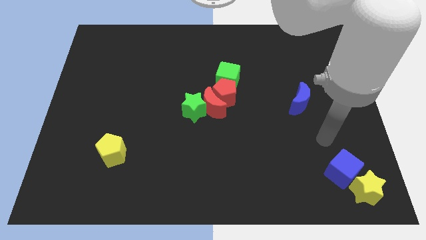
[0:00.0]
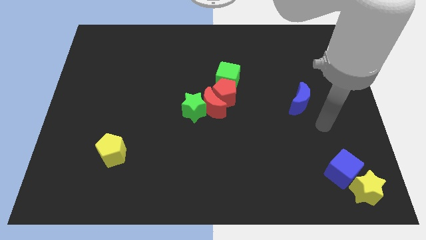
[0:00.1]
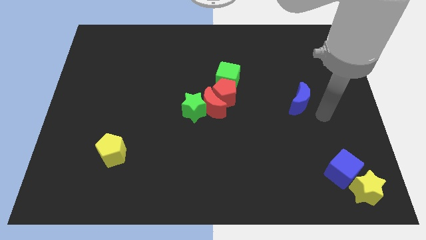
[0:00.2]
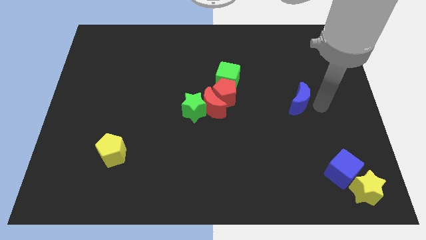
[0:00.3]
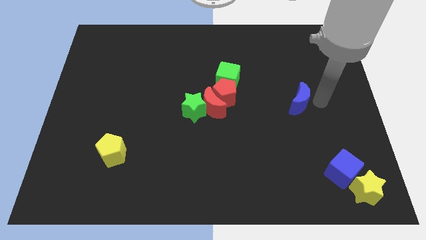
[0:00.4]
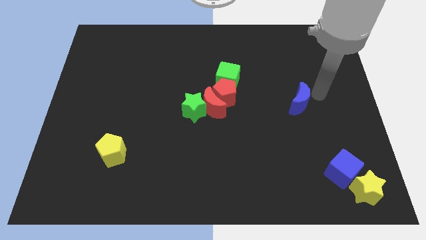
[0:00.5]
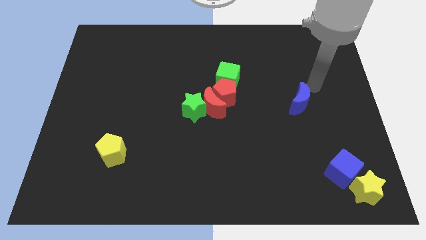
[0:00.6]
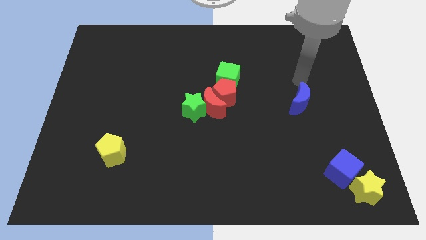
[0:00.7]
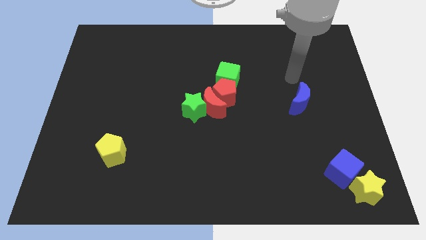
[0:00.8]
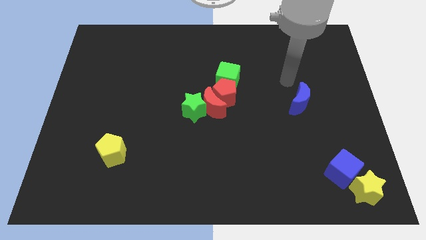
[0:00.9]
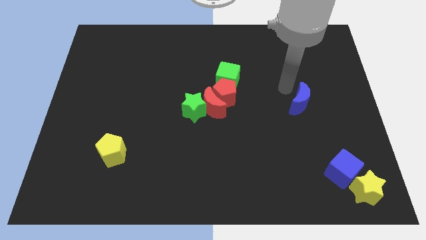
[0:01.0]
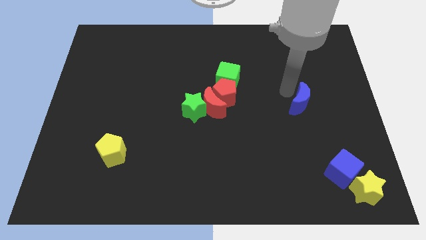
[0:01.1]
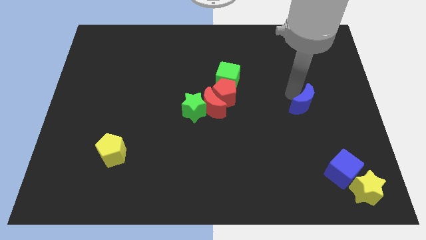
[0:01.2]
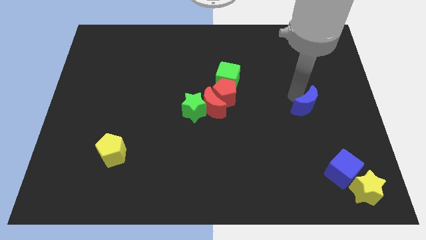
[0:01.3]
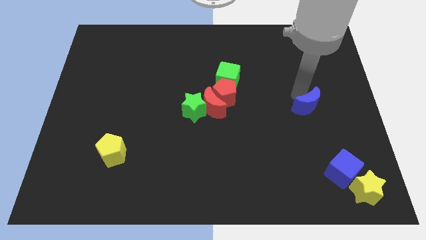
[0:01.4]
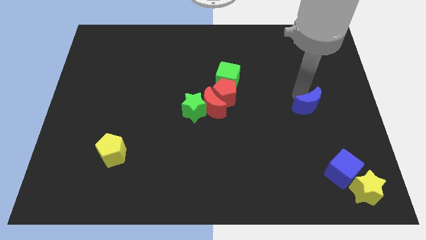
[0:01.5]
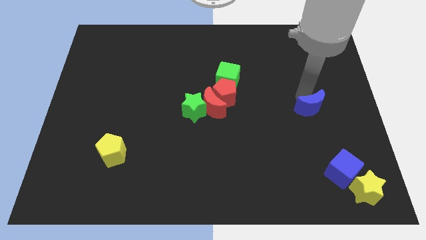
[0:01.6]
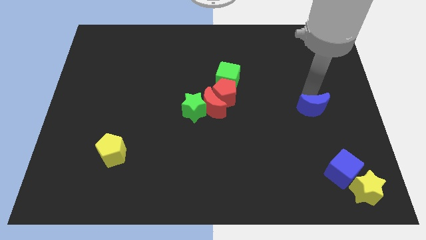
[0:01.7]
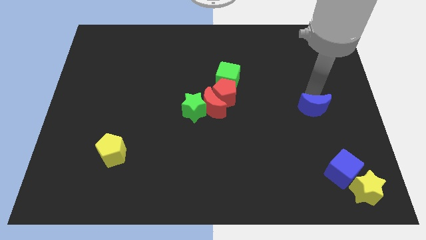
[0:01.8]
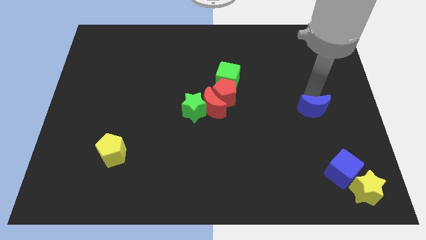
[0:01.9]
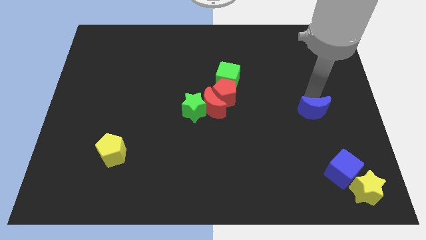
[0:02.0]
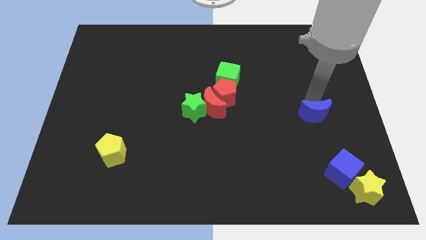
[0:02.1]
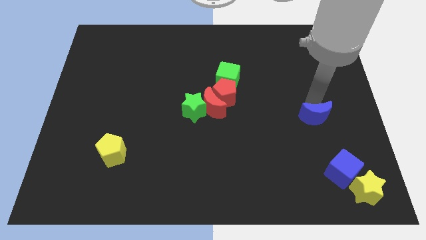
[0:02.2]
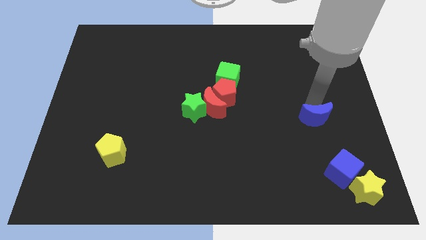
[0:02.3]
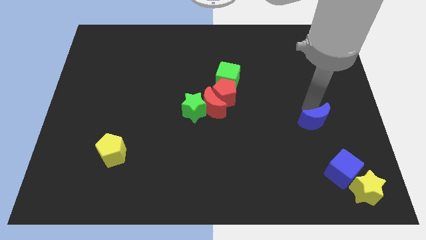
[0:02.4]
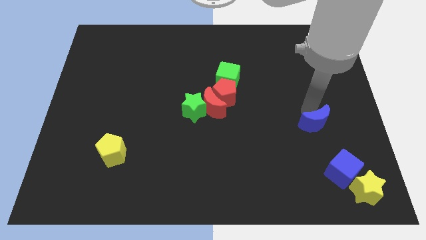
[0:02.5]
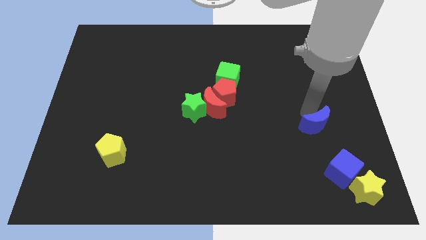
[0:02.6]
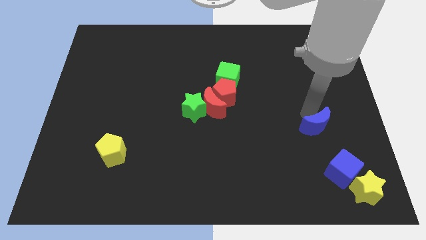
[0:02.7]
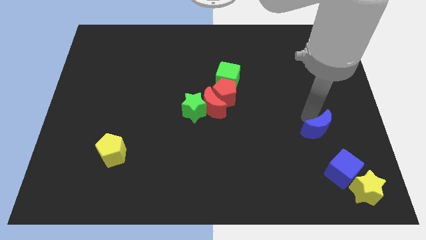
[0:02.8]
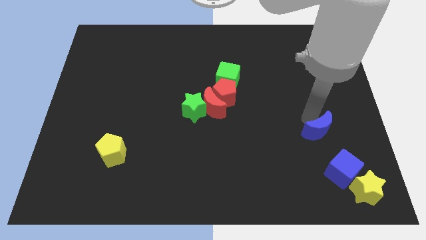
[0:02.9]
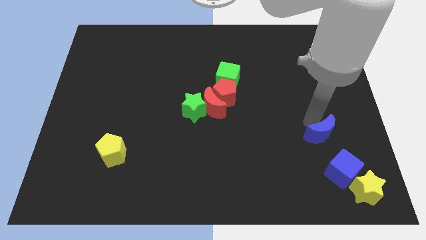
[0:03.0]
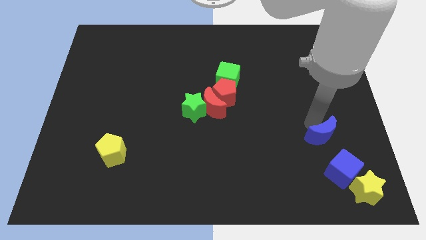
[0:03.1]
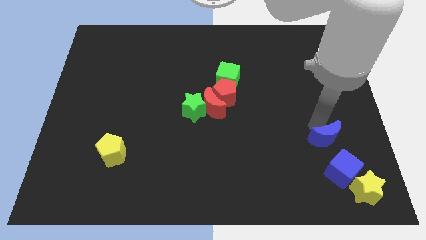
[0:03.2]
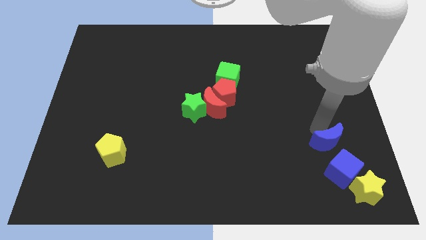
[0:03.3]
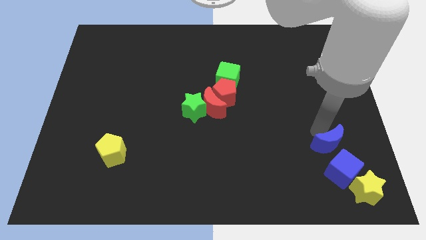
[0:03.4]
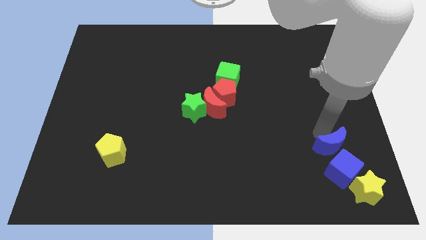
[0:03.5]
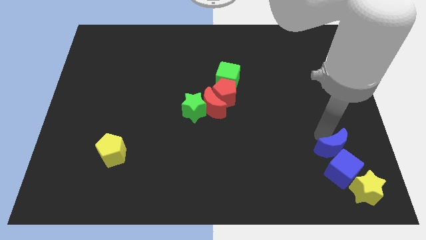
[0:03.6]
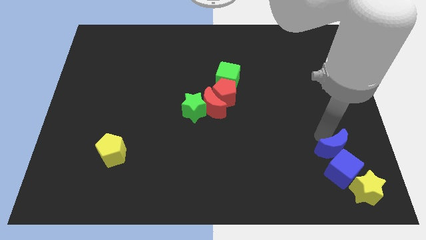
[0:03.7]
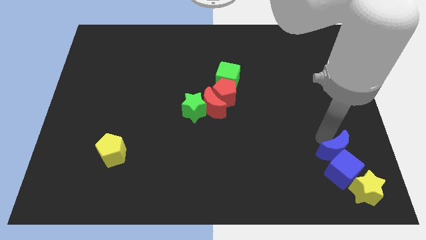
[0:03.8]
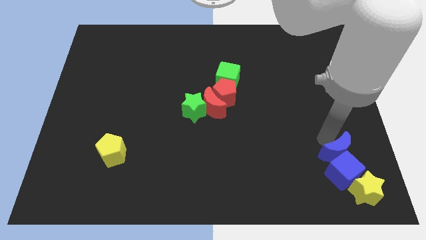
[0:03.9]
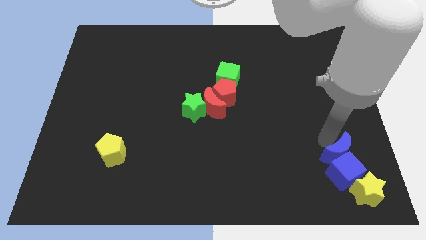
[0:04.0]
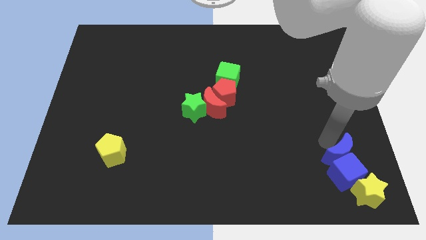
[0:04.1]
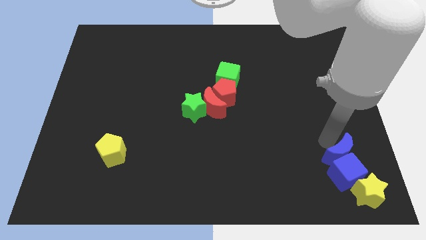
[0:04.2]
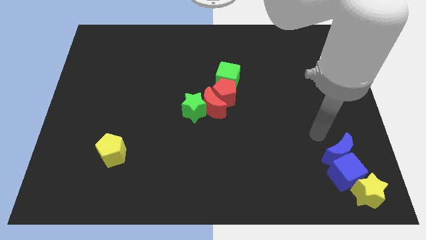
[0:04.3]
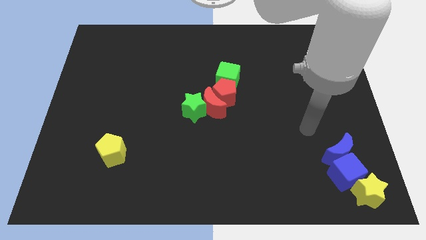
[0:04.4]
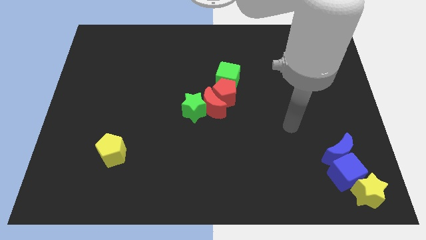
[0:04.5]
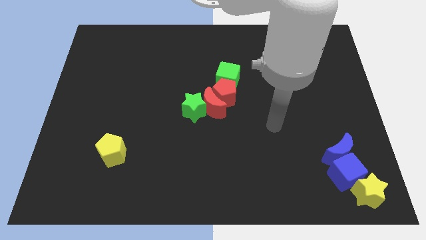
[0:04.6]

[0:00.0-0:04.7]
move the blue crescent into the blue cube

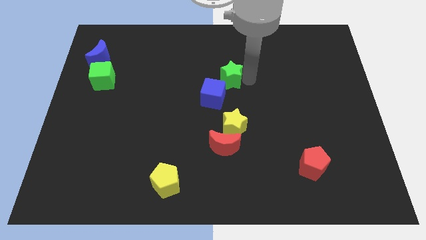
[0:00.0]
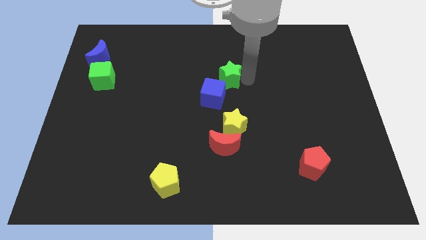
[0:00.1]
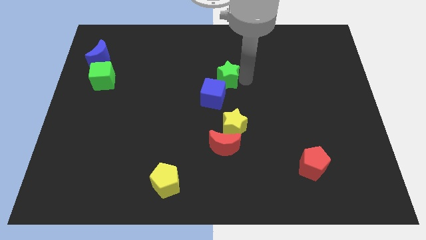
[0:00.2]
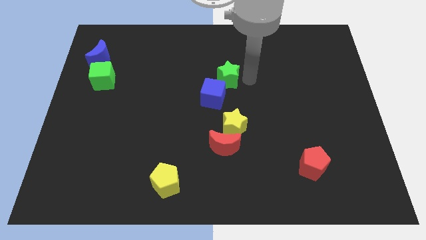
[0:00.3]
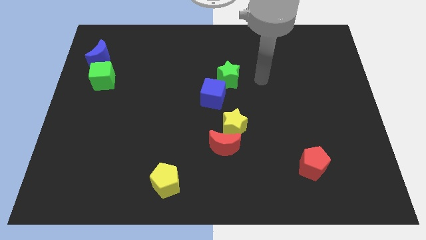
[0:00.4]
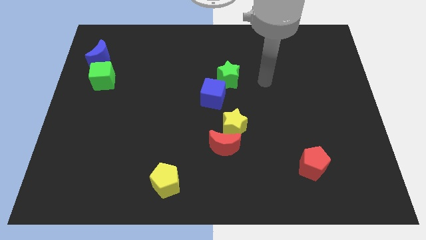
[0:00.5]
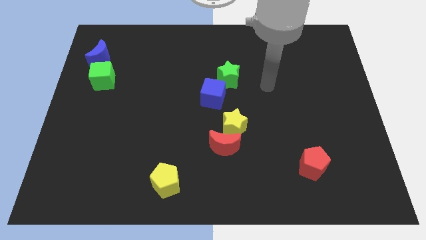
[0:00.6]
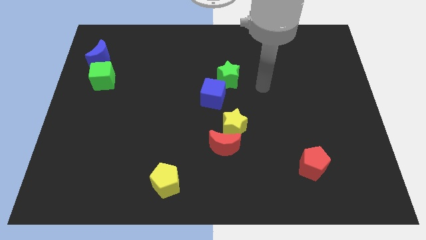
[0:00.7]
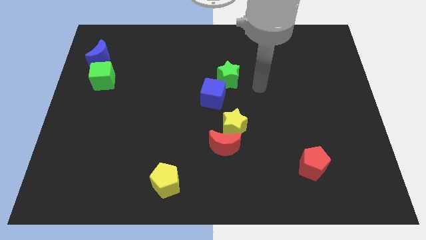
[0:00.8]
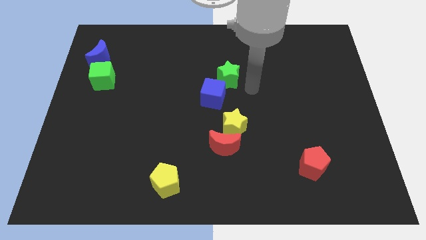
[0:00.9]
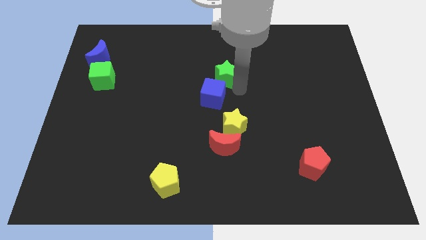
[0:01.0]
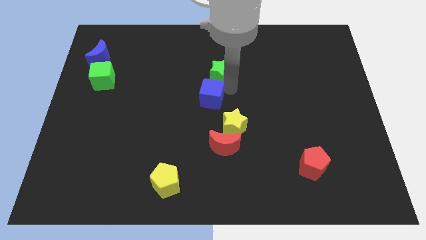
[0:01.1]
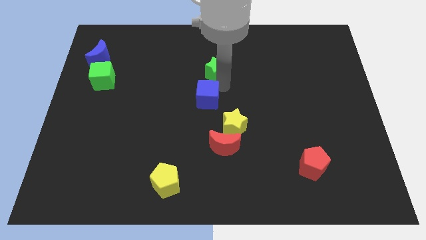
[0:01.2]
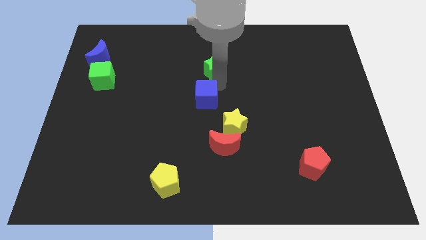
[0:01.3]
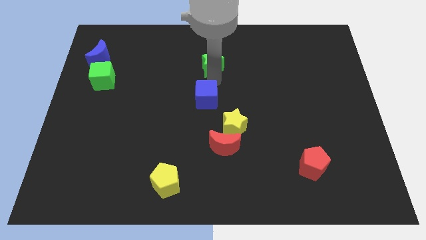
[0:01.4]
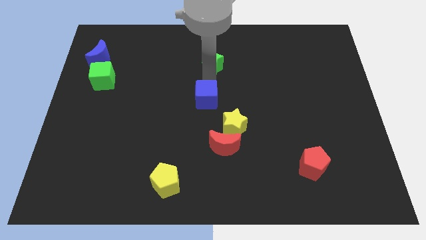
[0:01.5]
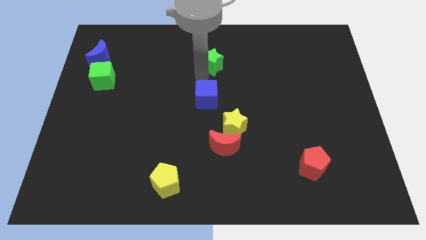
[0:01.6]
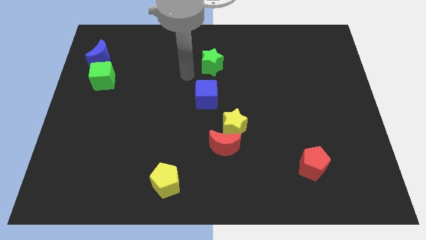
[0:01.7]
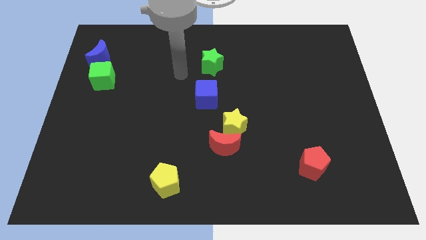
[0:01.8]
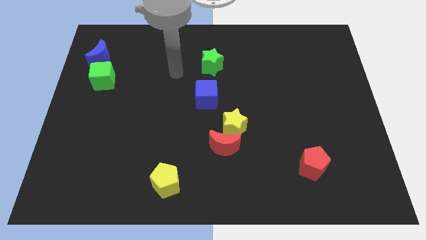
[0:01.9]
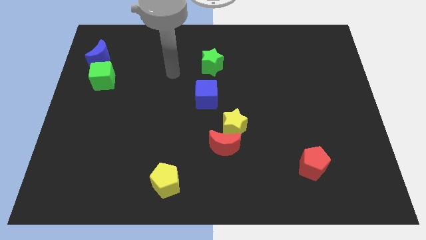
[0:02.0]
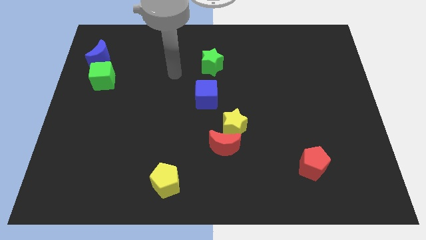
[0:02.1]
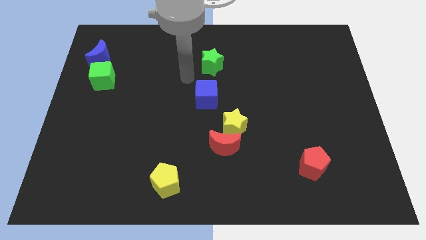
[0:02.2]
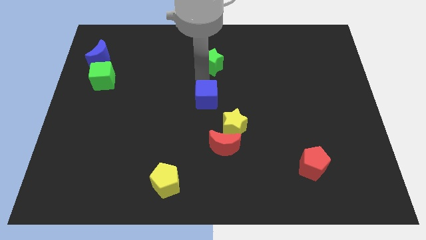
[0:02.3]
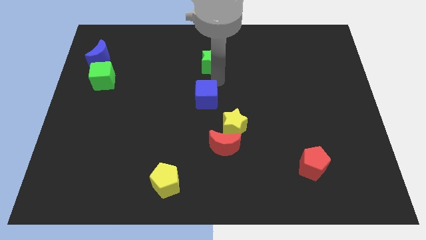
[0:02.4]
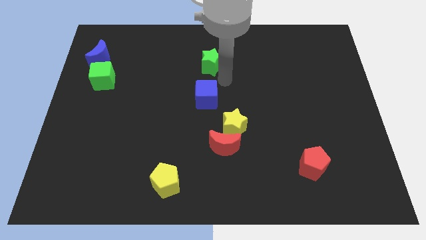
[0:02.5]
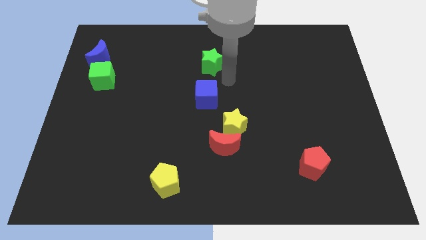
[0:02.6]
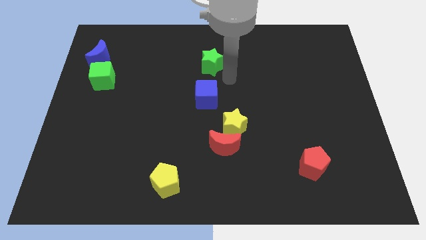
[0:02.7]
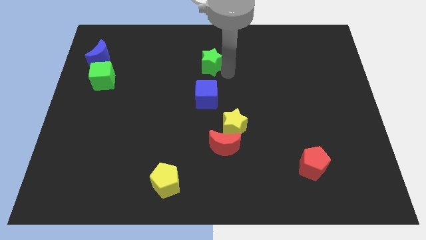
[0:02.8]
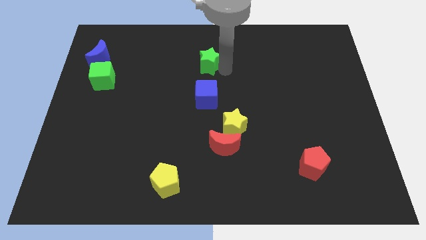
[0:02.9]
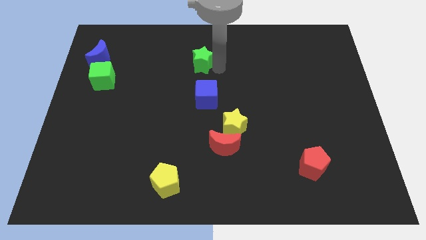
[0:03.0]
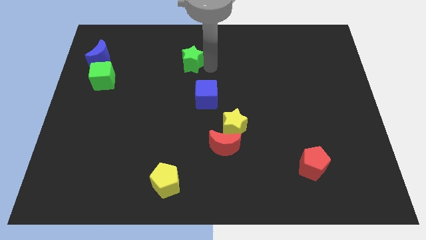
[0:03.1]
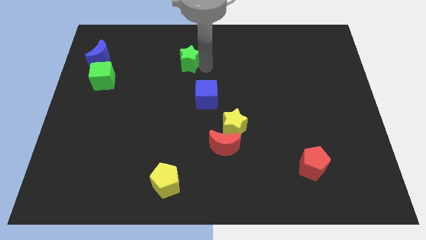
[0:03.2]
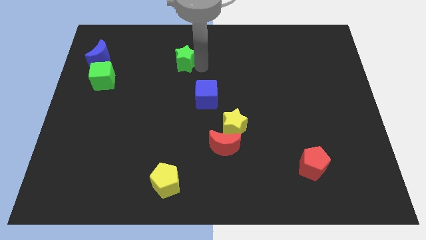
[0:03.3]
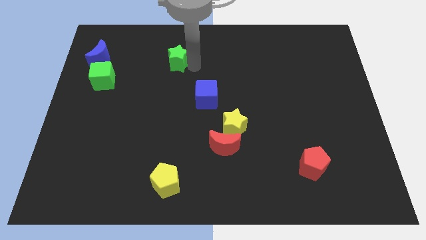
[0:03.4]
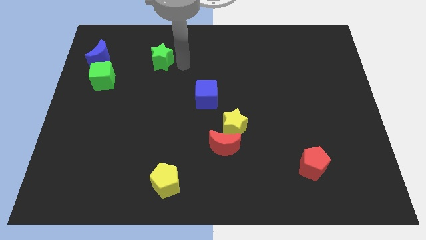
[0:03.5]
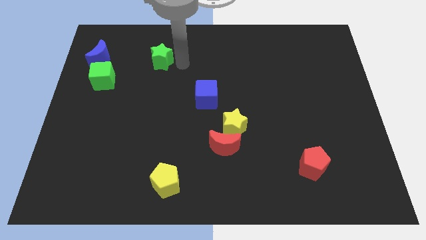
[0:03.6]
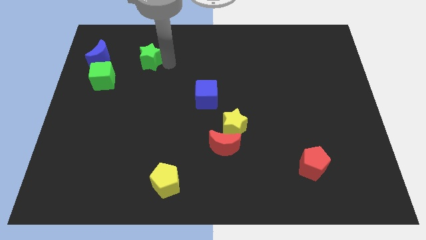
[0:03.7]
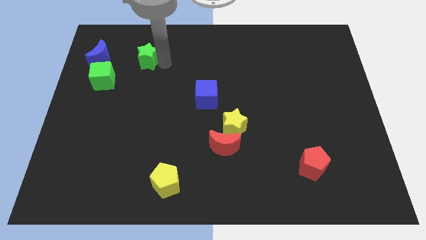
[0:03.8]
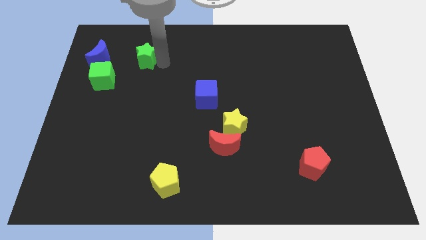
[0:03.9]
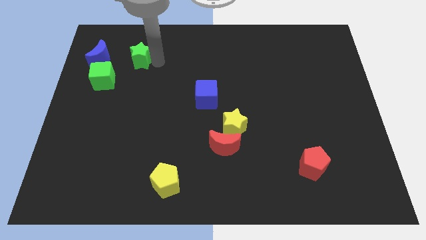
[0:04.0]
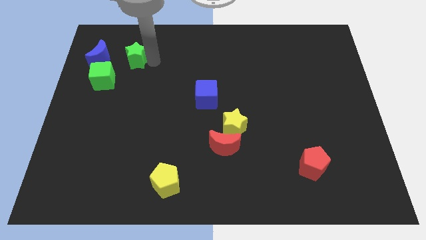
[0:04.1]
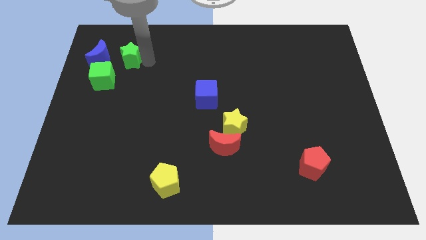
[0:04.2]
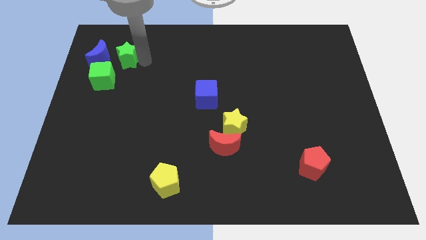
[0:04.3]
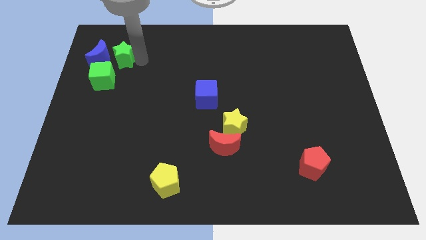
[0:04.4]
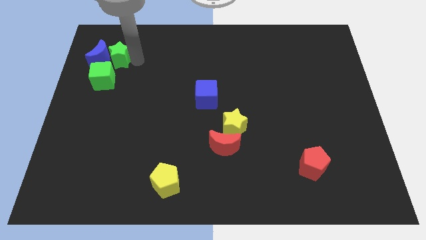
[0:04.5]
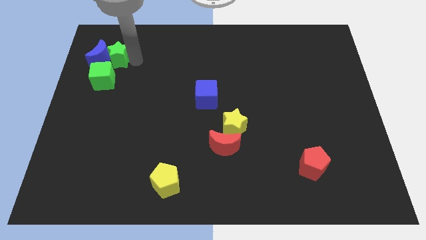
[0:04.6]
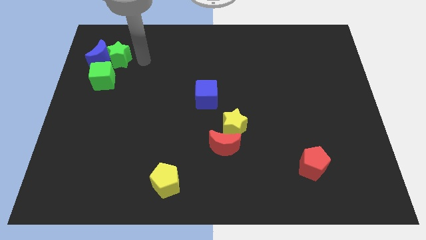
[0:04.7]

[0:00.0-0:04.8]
move the green star into the group of blocks
